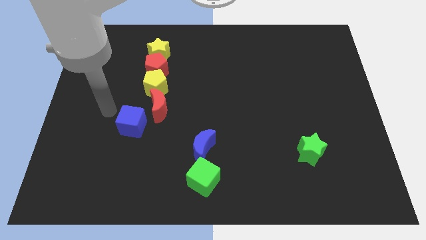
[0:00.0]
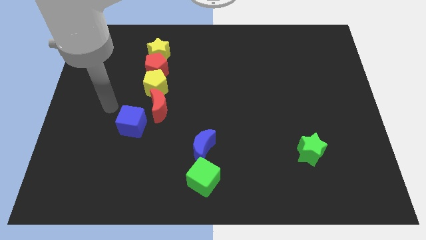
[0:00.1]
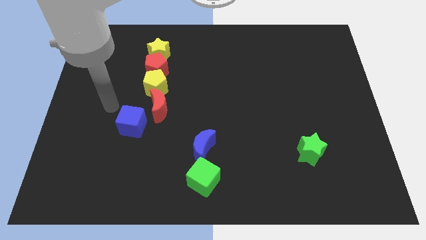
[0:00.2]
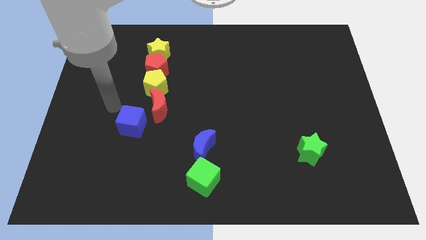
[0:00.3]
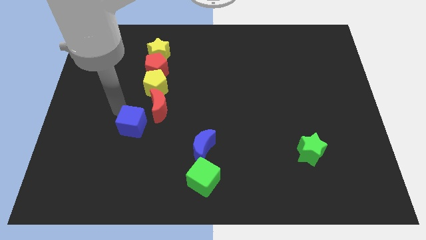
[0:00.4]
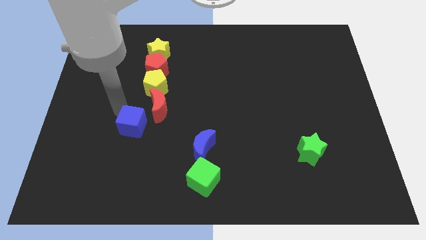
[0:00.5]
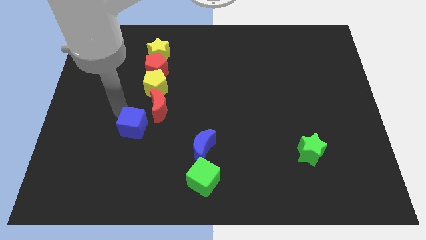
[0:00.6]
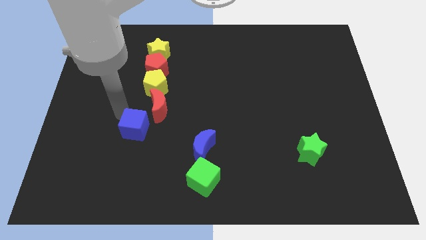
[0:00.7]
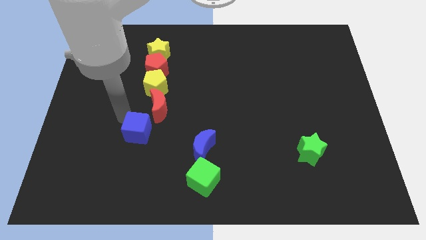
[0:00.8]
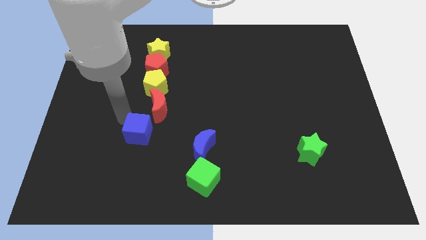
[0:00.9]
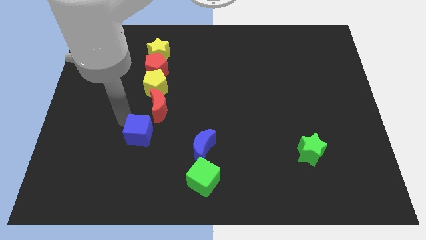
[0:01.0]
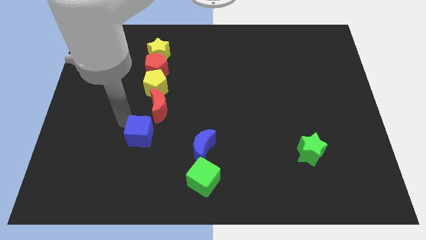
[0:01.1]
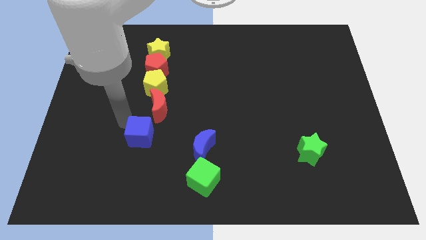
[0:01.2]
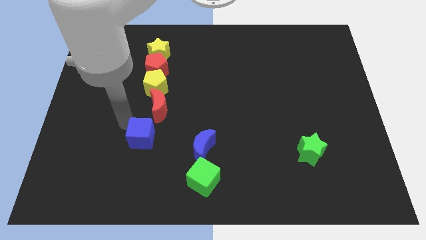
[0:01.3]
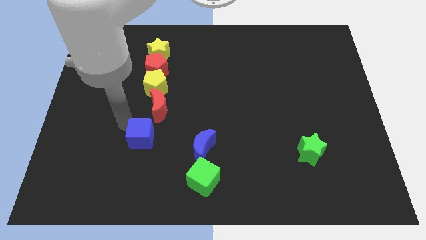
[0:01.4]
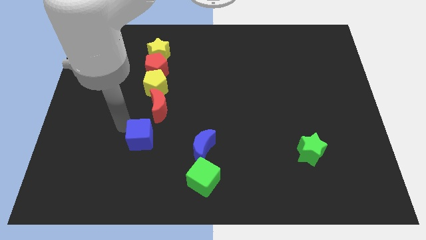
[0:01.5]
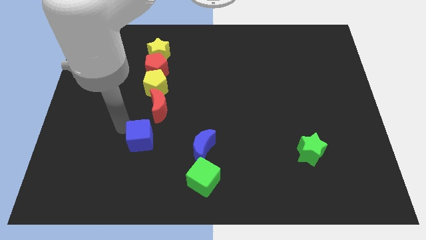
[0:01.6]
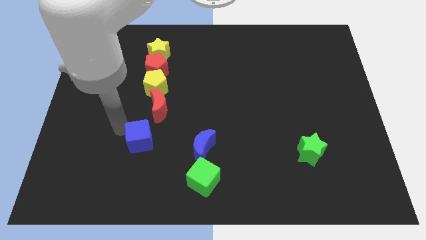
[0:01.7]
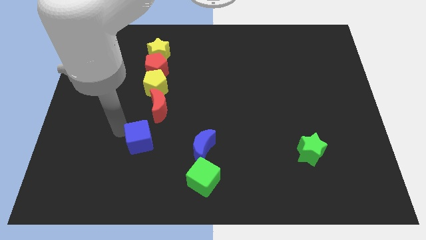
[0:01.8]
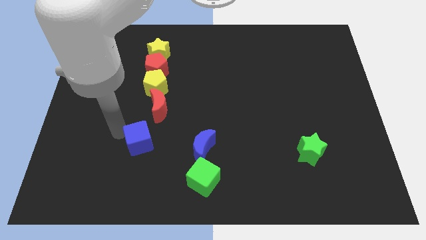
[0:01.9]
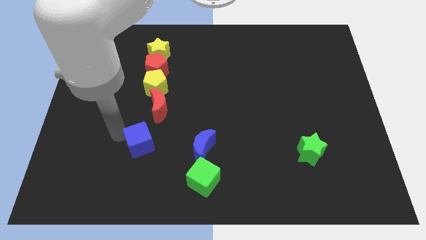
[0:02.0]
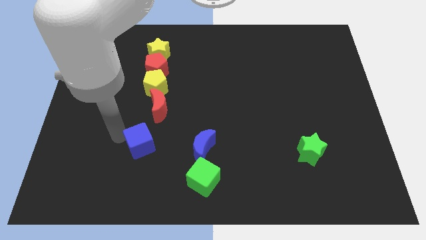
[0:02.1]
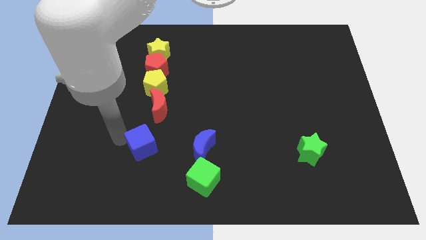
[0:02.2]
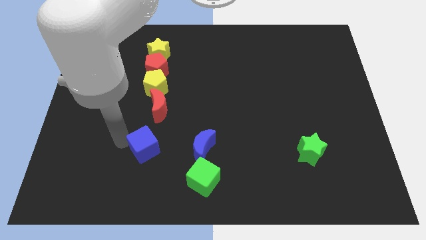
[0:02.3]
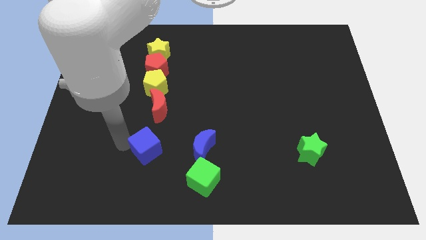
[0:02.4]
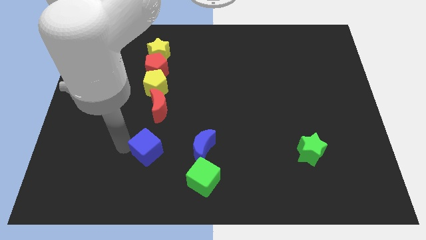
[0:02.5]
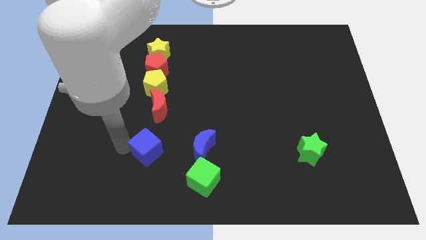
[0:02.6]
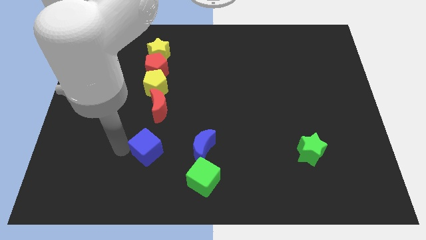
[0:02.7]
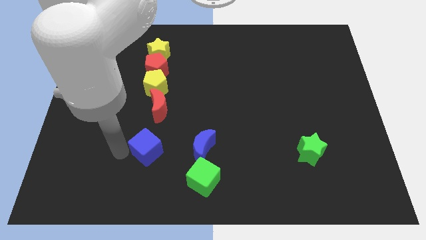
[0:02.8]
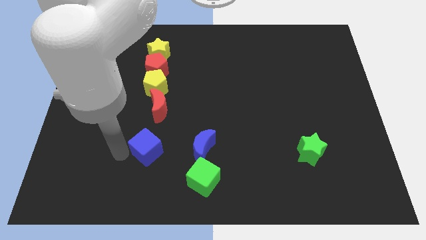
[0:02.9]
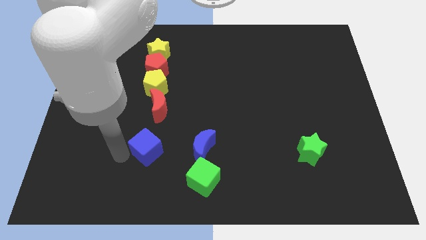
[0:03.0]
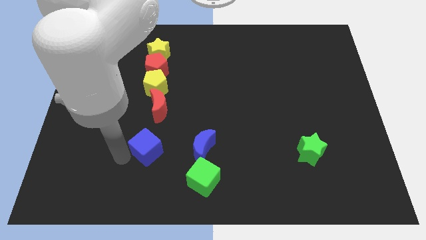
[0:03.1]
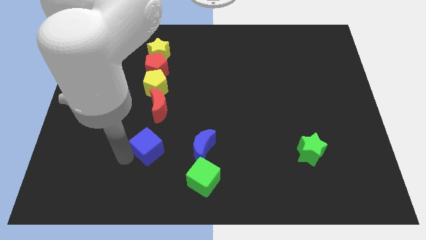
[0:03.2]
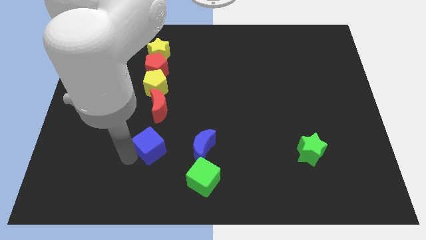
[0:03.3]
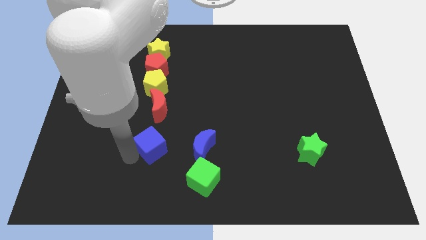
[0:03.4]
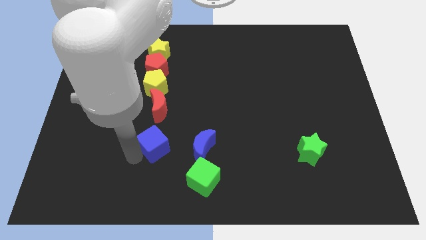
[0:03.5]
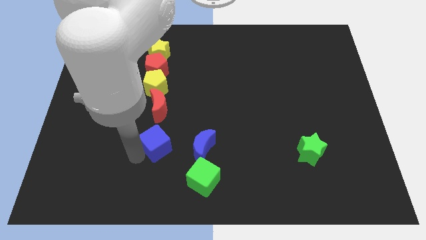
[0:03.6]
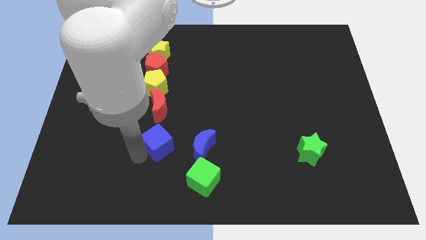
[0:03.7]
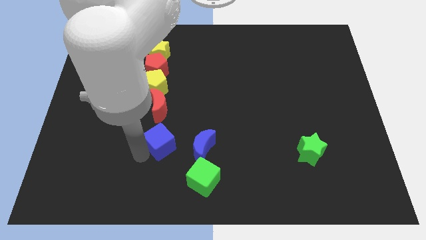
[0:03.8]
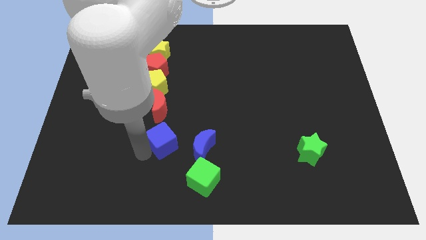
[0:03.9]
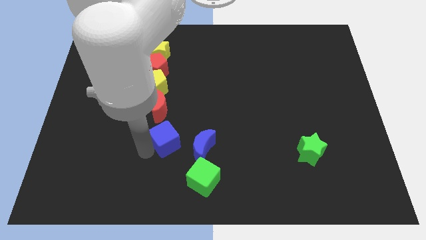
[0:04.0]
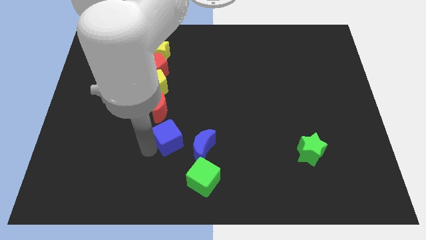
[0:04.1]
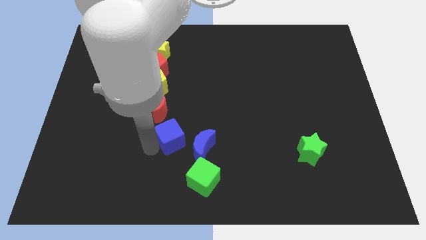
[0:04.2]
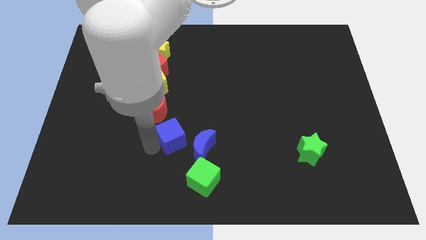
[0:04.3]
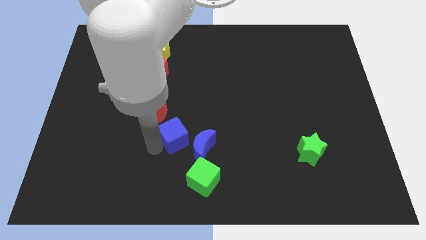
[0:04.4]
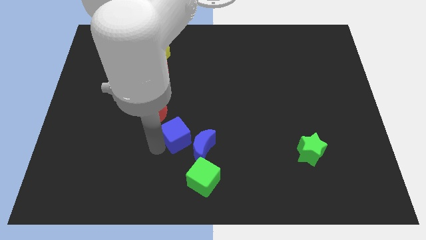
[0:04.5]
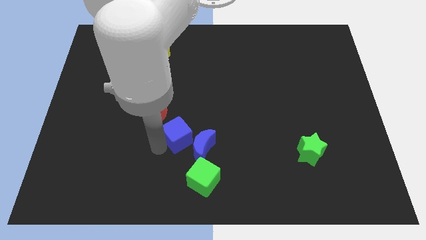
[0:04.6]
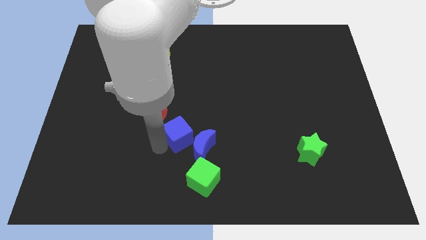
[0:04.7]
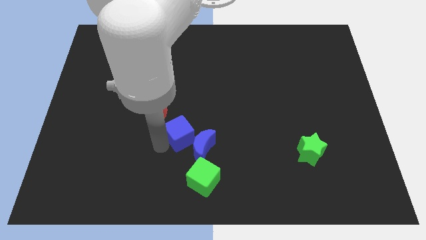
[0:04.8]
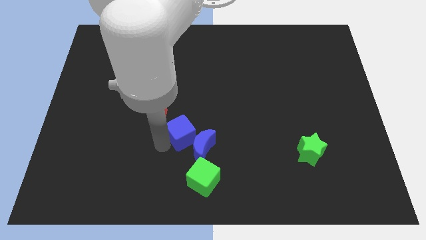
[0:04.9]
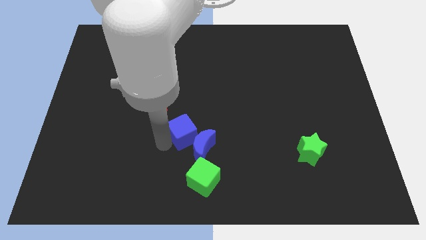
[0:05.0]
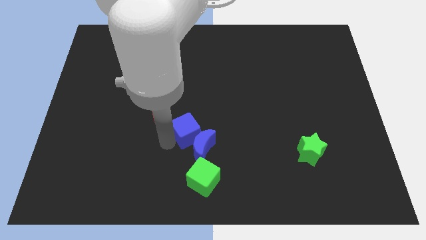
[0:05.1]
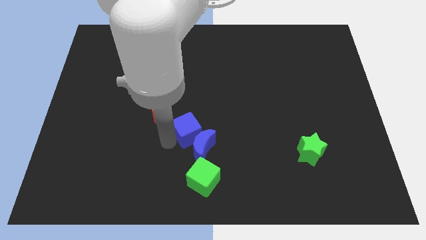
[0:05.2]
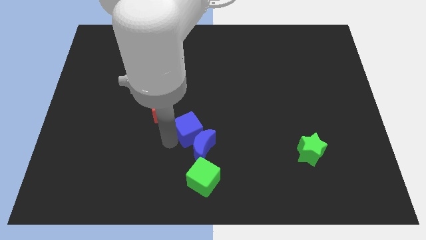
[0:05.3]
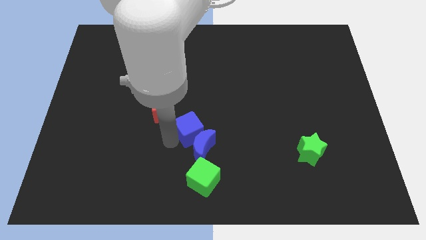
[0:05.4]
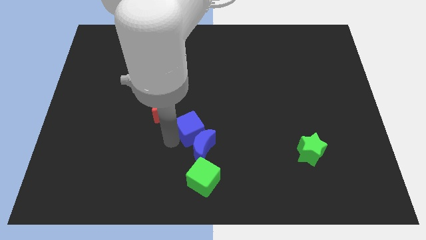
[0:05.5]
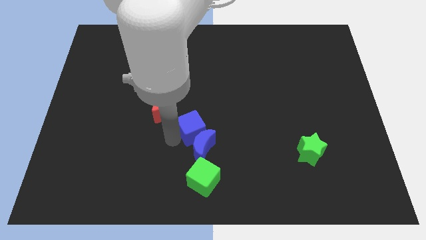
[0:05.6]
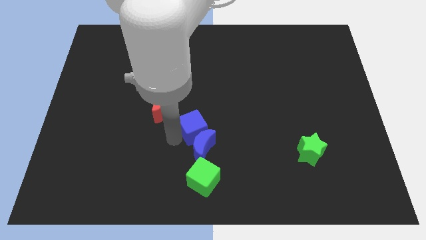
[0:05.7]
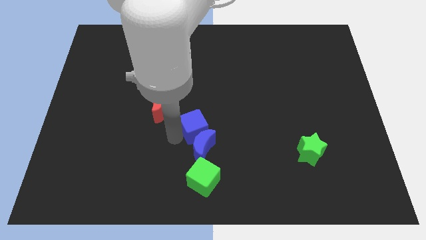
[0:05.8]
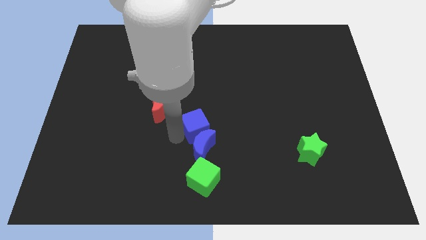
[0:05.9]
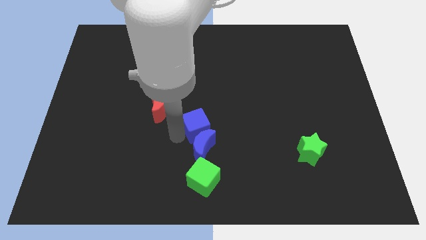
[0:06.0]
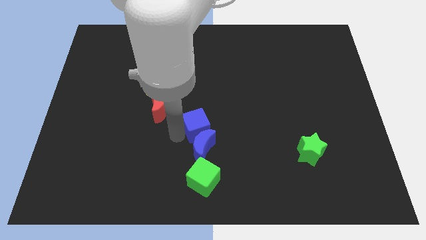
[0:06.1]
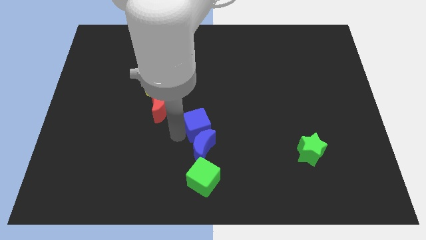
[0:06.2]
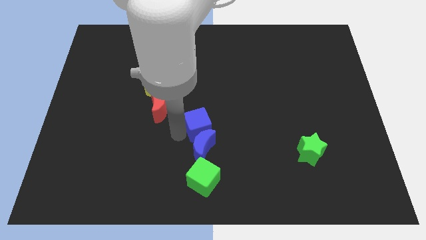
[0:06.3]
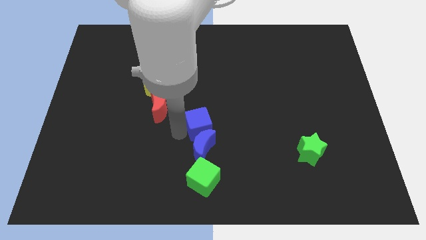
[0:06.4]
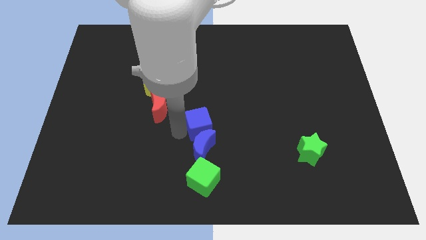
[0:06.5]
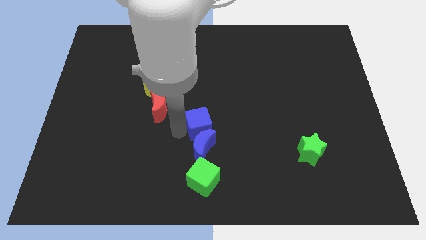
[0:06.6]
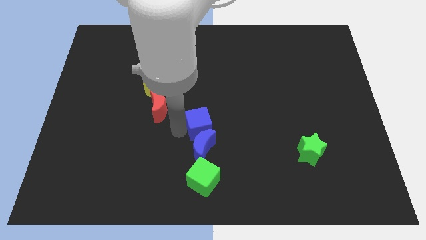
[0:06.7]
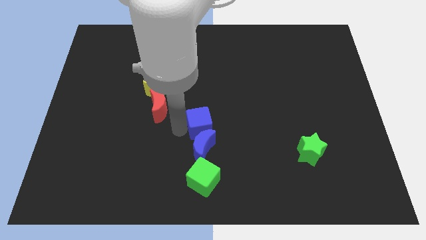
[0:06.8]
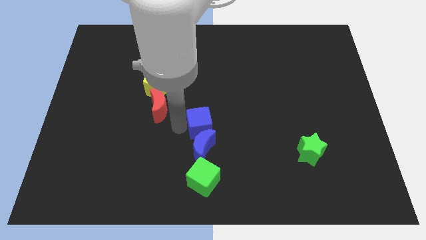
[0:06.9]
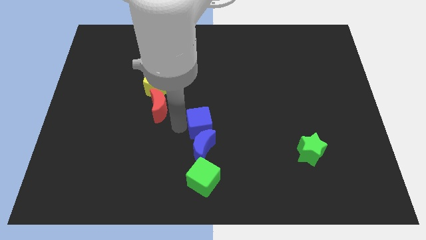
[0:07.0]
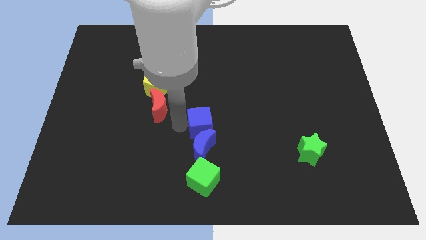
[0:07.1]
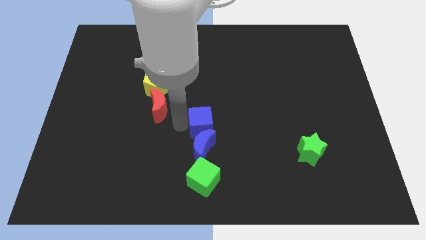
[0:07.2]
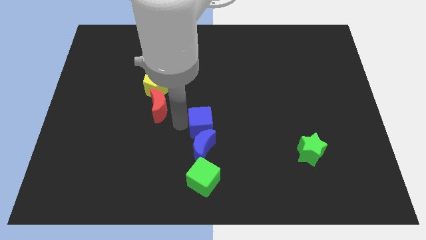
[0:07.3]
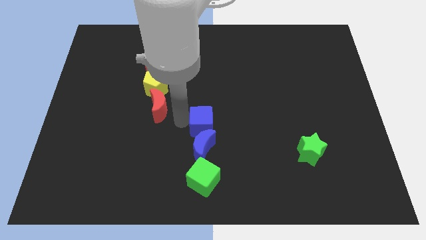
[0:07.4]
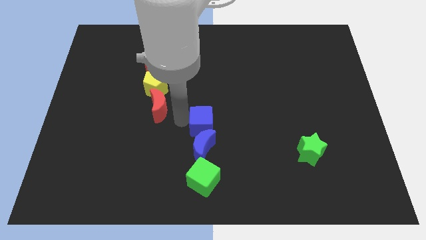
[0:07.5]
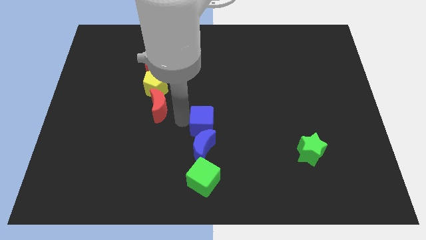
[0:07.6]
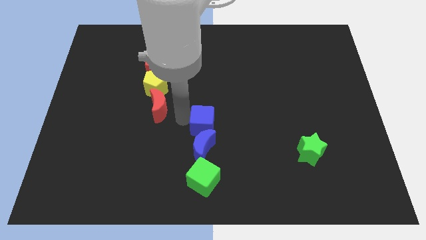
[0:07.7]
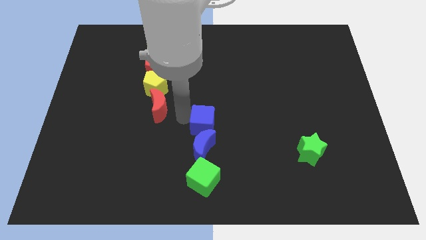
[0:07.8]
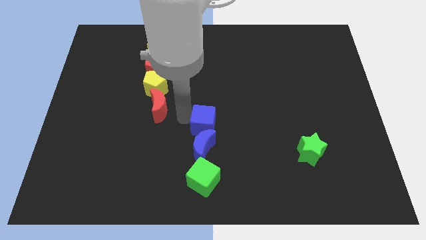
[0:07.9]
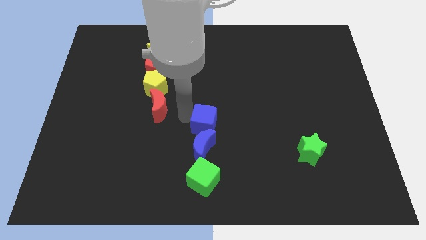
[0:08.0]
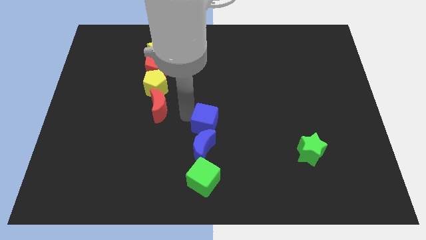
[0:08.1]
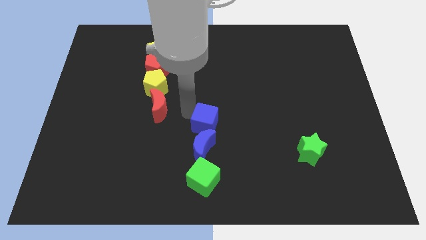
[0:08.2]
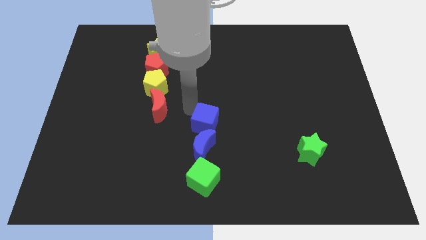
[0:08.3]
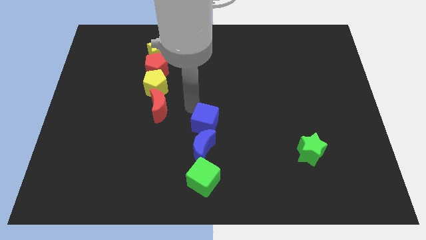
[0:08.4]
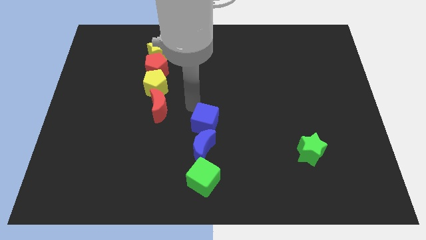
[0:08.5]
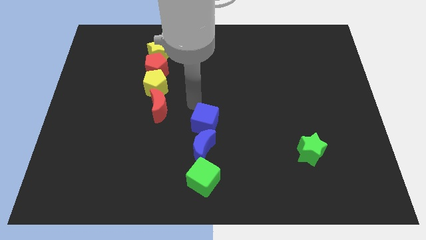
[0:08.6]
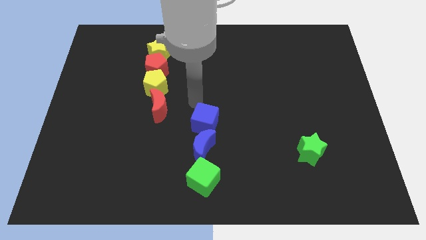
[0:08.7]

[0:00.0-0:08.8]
push the blue cube to the top of the blue crescent

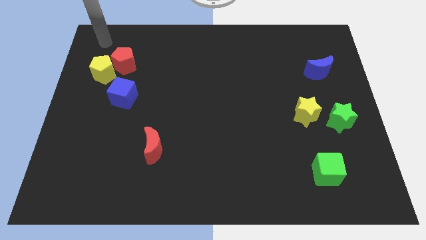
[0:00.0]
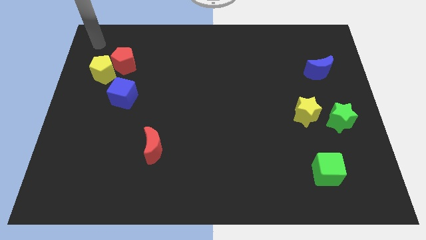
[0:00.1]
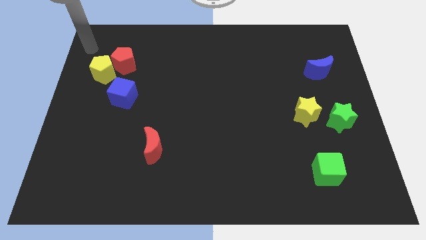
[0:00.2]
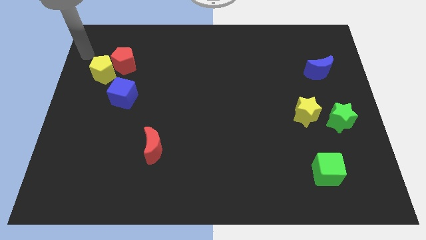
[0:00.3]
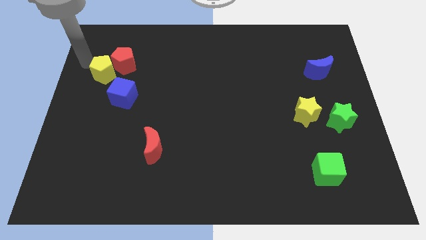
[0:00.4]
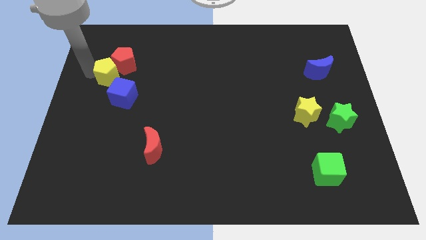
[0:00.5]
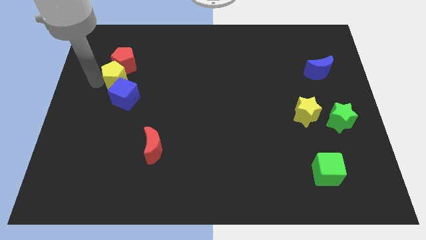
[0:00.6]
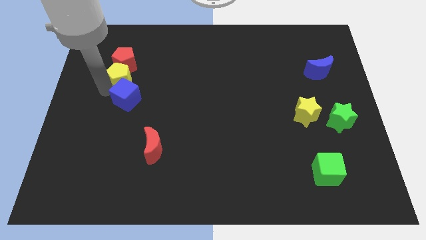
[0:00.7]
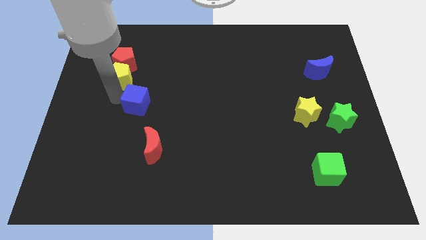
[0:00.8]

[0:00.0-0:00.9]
place yellow pentagon to the bottom of red pentagon
